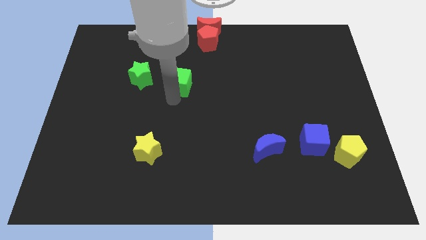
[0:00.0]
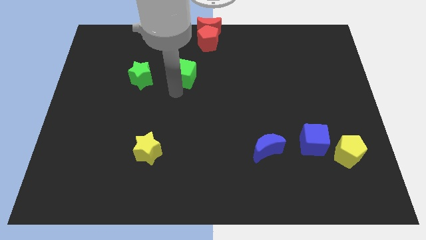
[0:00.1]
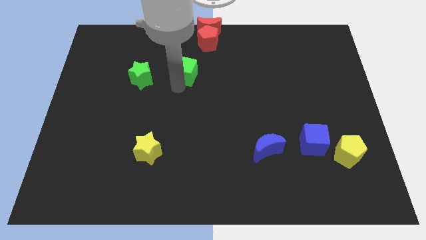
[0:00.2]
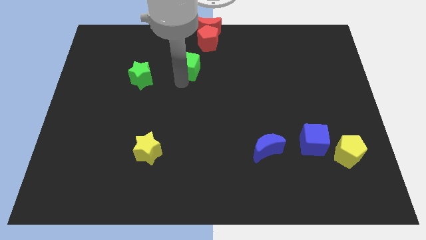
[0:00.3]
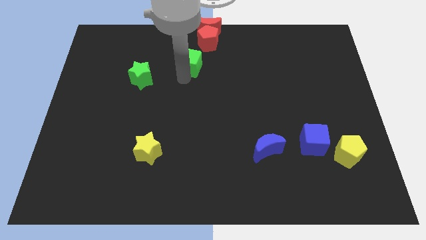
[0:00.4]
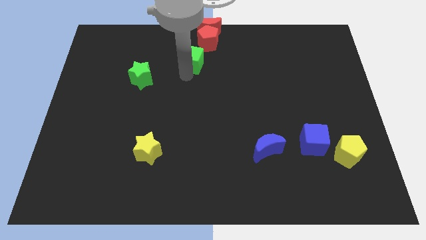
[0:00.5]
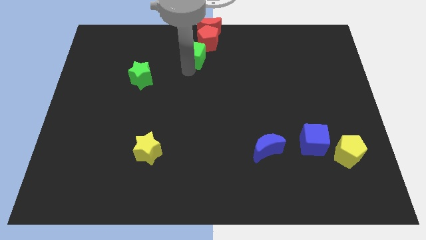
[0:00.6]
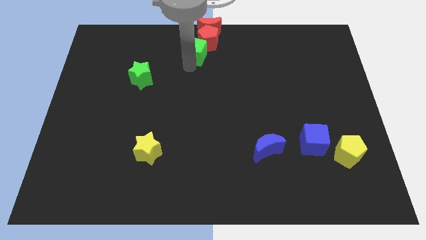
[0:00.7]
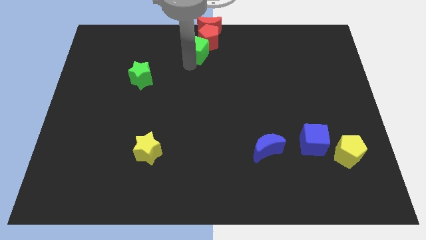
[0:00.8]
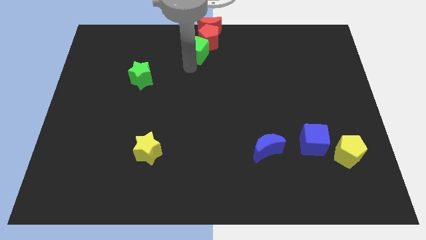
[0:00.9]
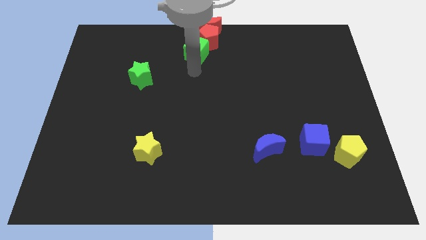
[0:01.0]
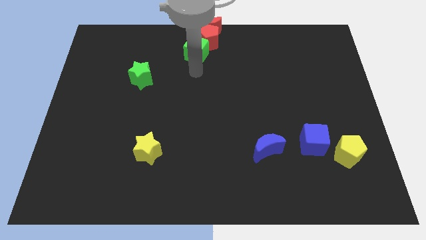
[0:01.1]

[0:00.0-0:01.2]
push green cube in to red pentagon

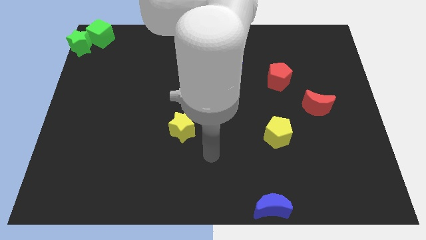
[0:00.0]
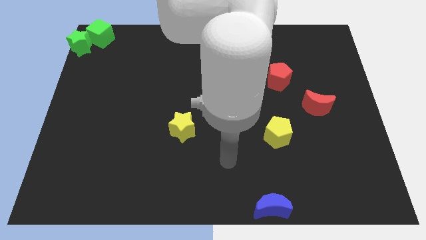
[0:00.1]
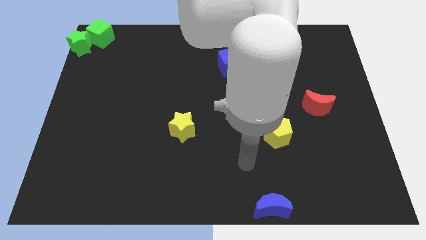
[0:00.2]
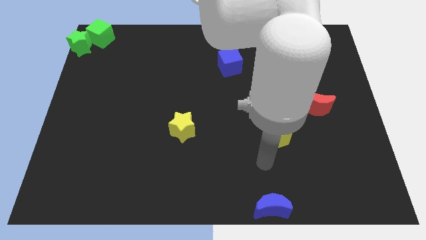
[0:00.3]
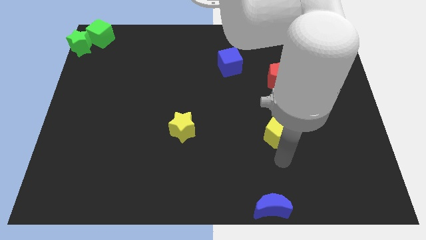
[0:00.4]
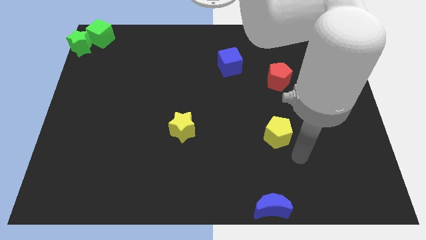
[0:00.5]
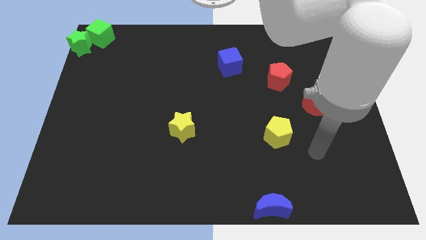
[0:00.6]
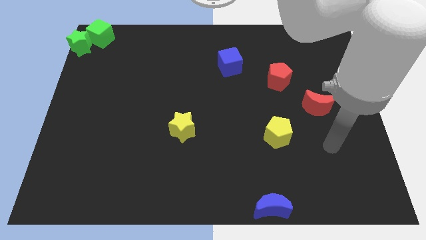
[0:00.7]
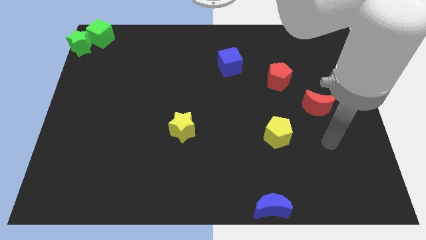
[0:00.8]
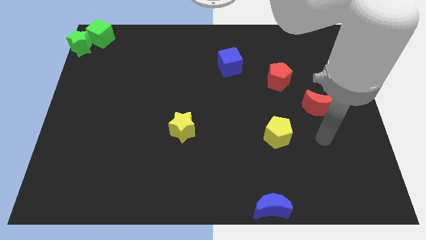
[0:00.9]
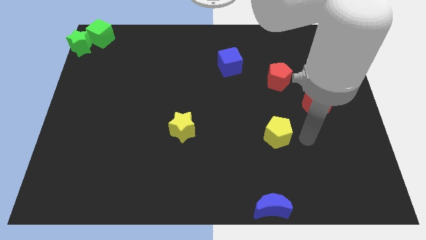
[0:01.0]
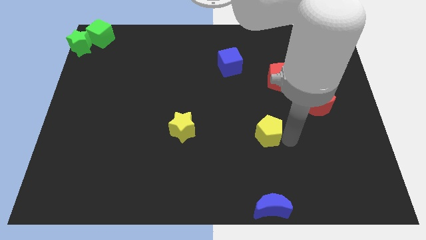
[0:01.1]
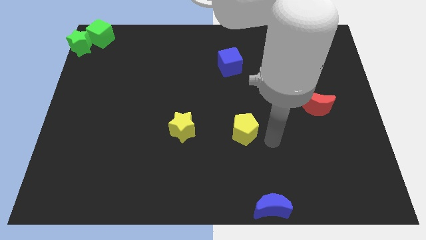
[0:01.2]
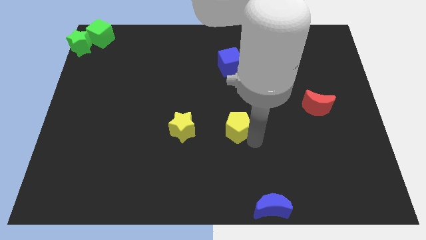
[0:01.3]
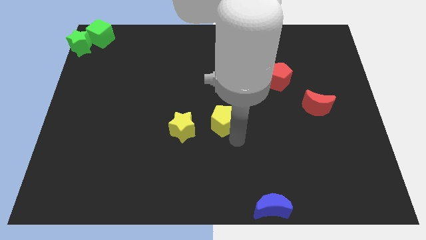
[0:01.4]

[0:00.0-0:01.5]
slide the yellow pentagon towards the center of the board

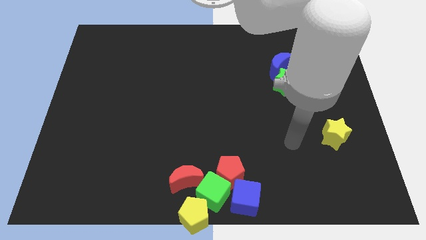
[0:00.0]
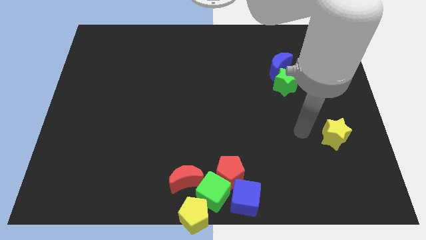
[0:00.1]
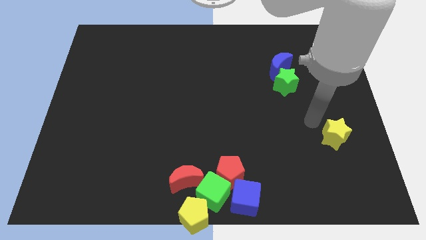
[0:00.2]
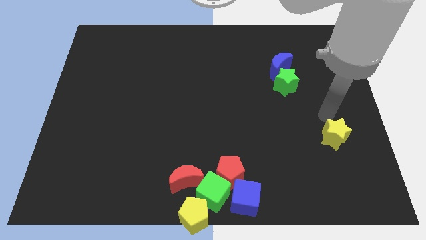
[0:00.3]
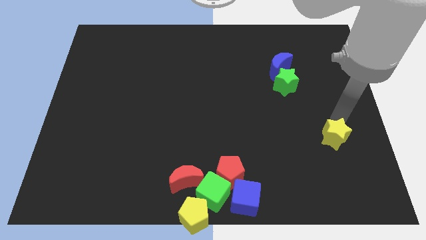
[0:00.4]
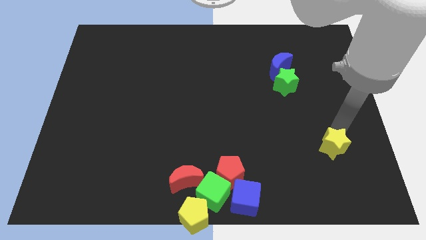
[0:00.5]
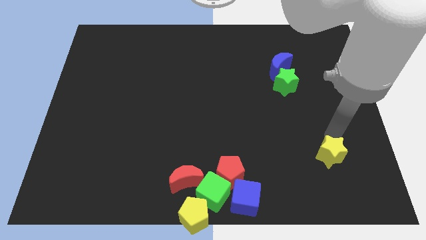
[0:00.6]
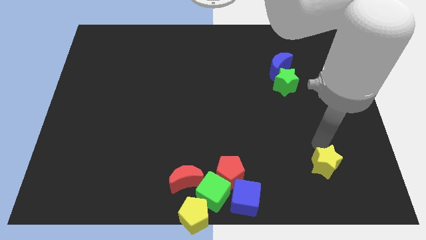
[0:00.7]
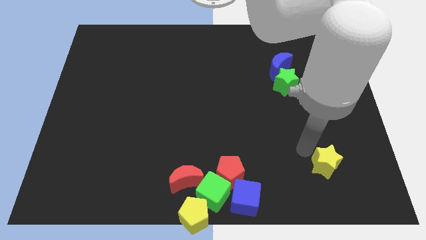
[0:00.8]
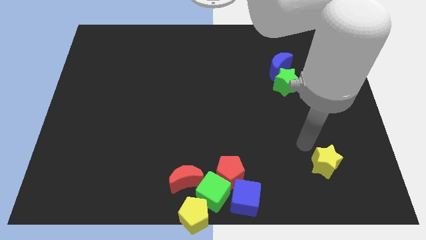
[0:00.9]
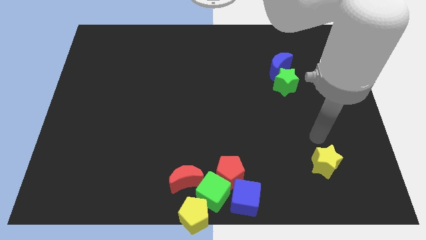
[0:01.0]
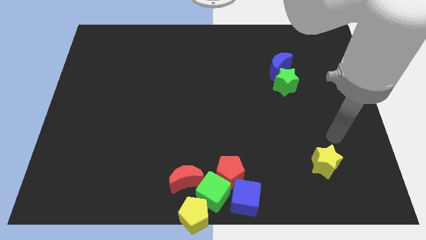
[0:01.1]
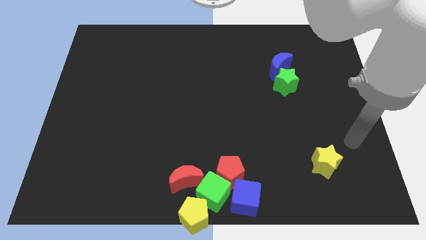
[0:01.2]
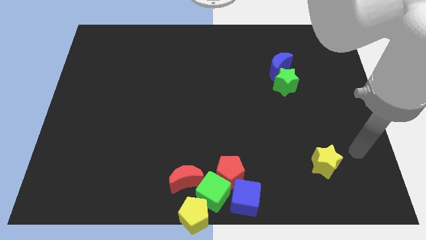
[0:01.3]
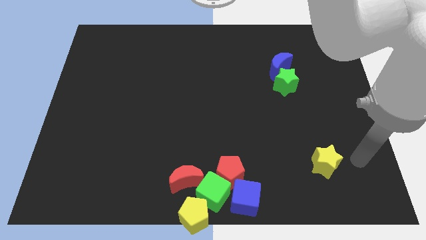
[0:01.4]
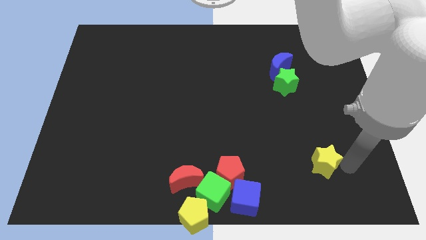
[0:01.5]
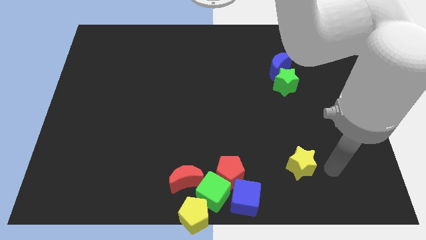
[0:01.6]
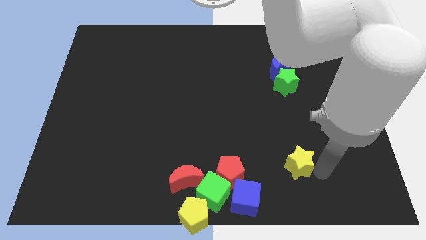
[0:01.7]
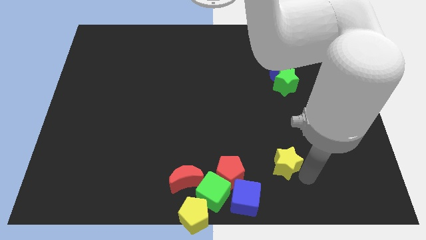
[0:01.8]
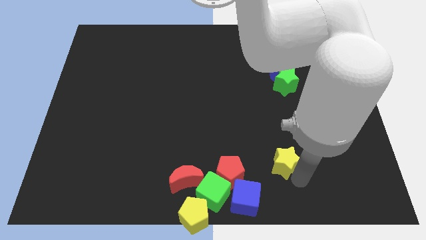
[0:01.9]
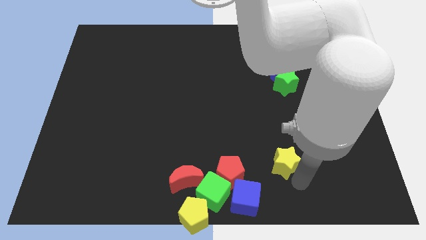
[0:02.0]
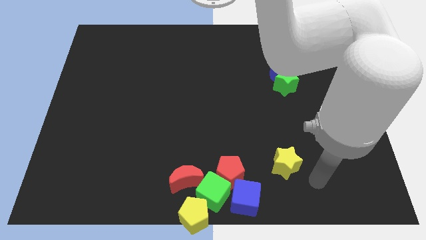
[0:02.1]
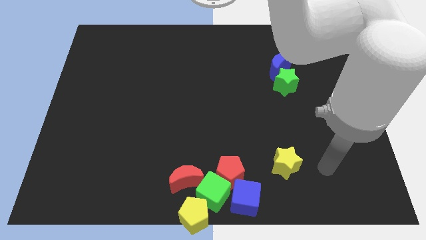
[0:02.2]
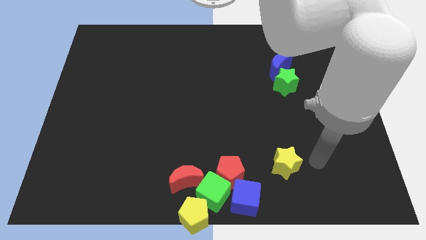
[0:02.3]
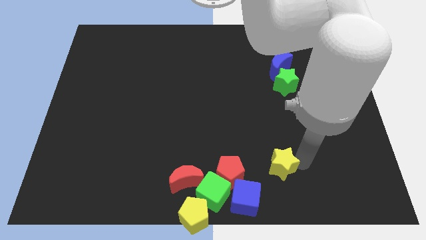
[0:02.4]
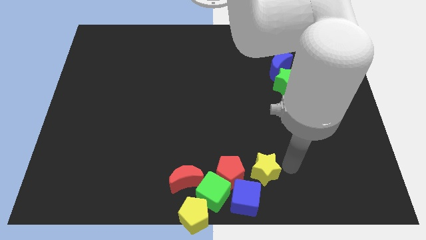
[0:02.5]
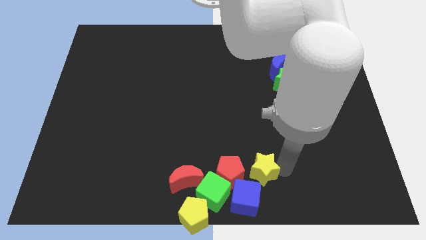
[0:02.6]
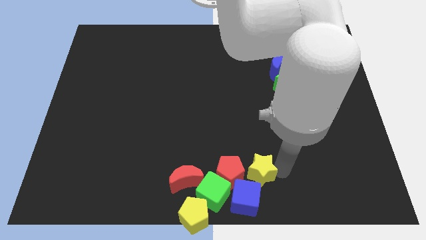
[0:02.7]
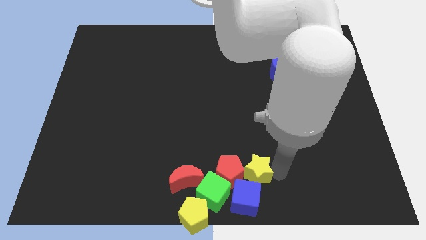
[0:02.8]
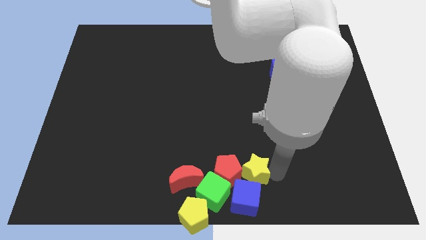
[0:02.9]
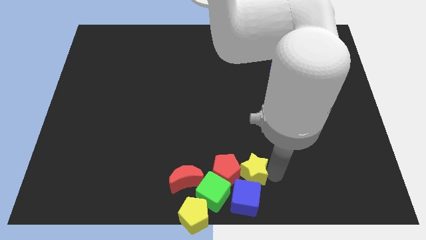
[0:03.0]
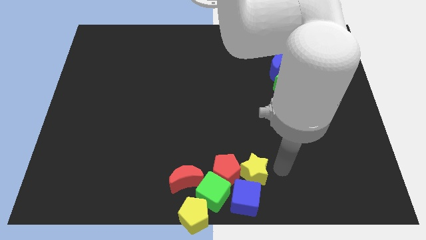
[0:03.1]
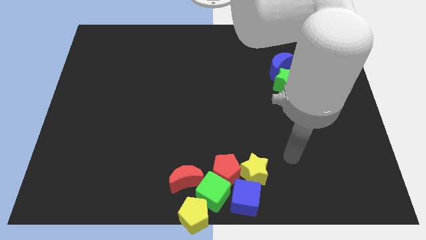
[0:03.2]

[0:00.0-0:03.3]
move the yellow star into the group of blocks

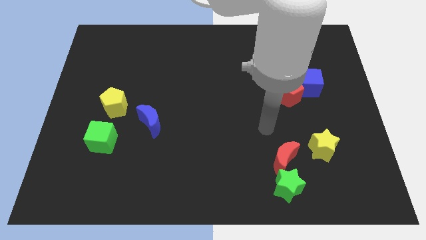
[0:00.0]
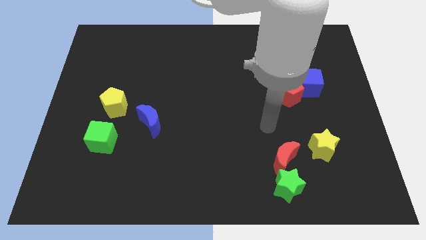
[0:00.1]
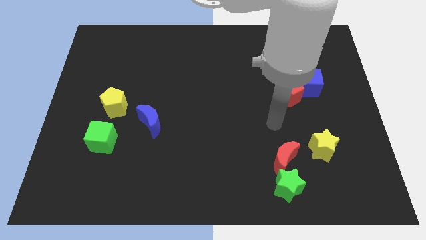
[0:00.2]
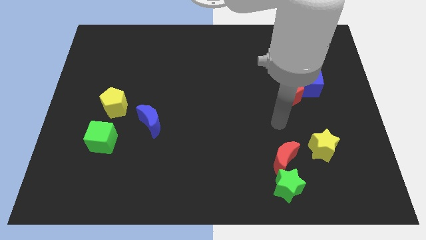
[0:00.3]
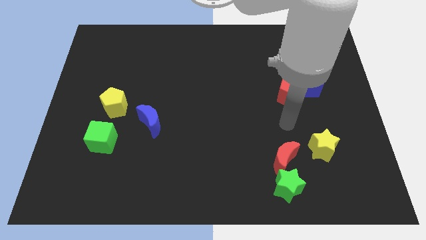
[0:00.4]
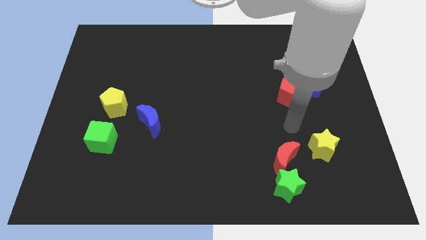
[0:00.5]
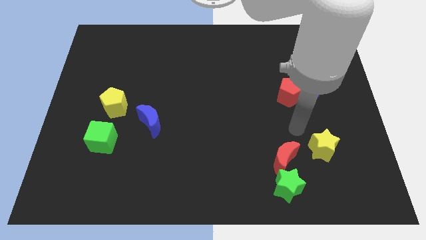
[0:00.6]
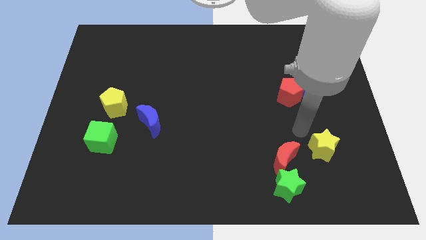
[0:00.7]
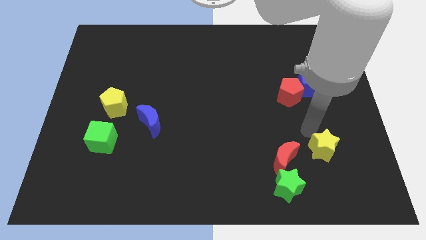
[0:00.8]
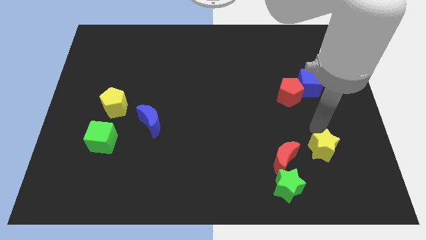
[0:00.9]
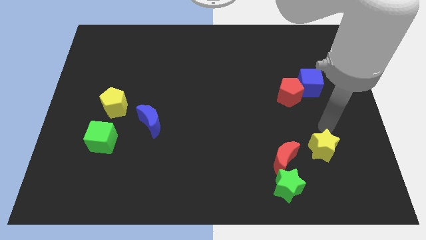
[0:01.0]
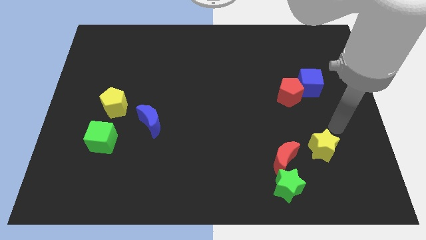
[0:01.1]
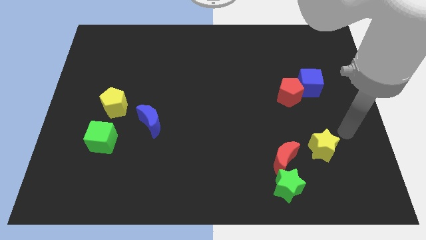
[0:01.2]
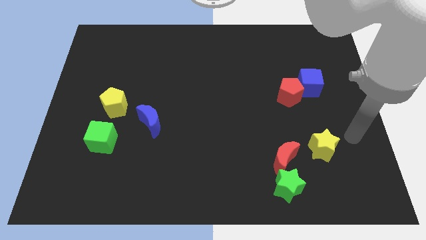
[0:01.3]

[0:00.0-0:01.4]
move the arm close to the yellow star

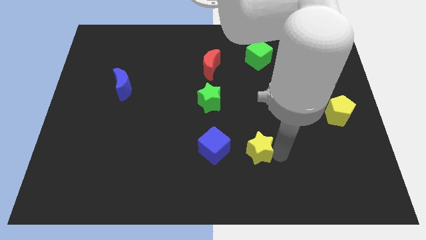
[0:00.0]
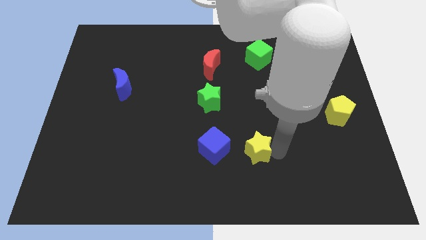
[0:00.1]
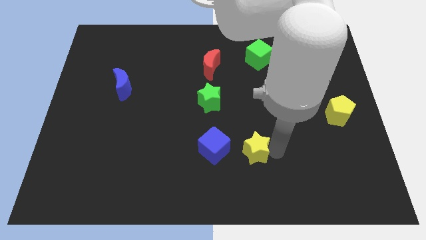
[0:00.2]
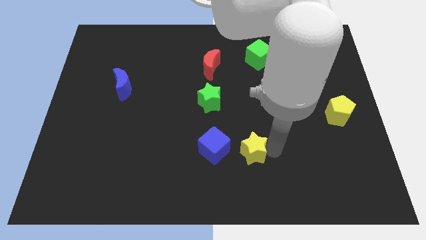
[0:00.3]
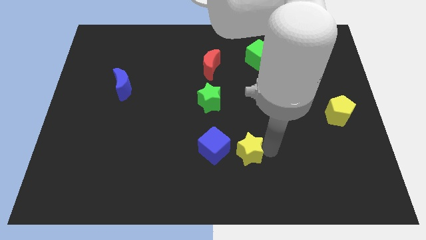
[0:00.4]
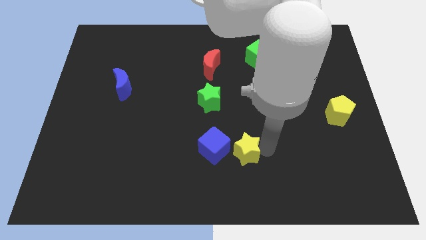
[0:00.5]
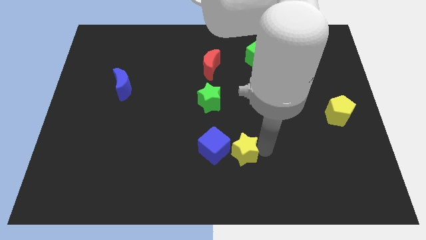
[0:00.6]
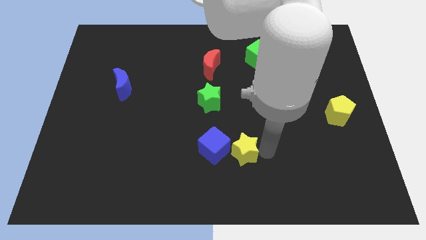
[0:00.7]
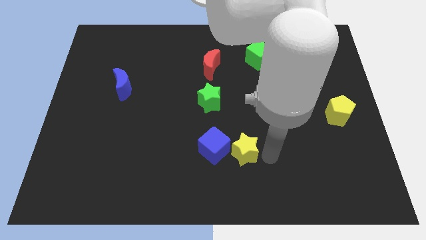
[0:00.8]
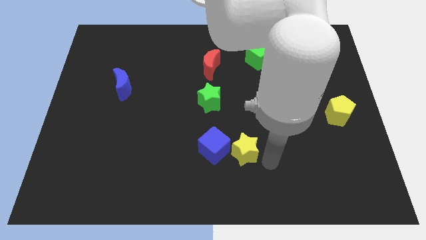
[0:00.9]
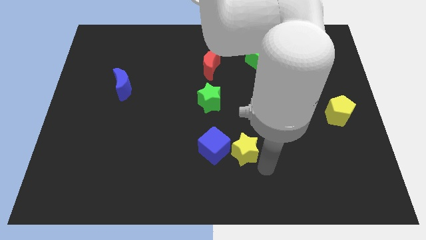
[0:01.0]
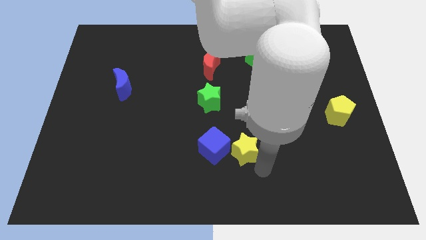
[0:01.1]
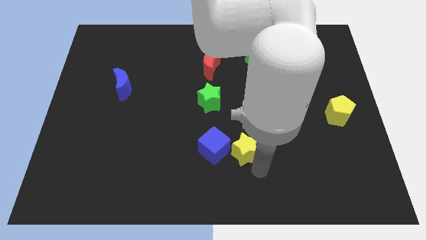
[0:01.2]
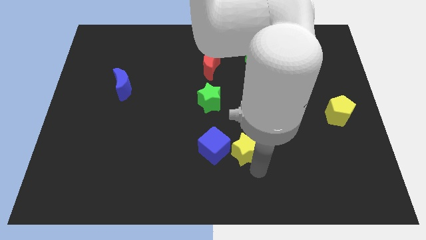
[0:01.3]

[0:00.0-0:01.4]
place the yellow star close to the blue cube
